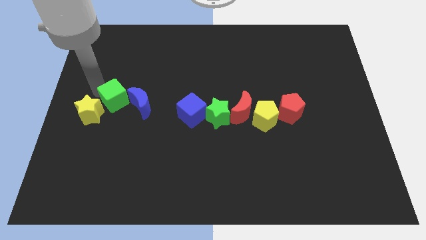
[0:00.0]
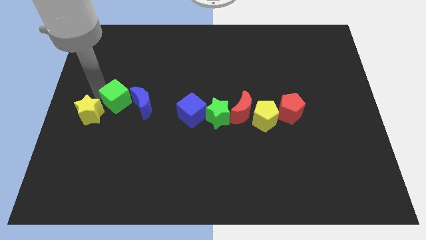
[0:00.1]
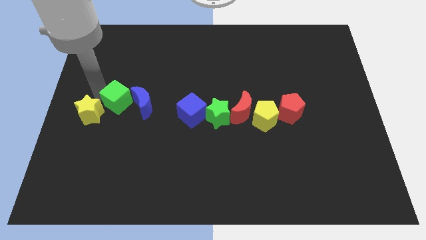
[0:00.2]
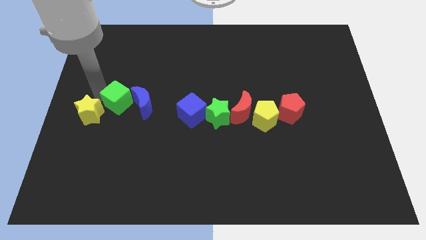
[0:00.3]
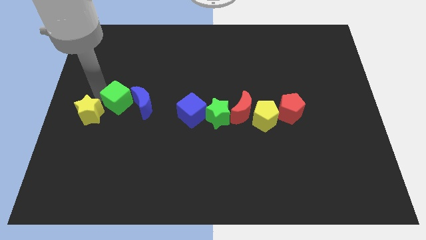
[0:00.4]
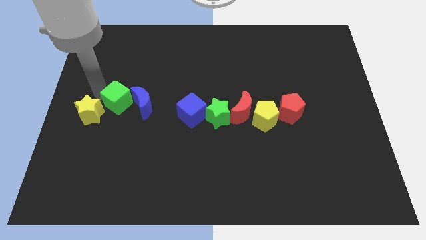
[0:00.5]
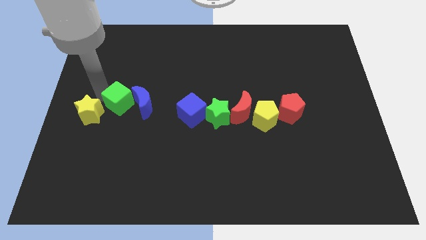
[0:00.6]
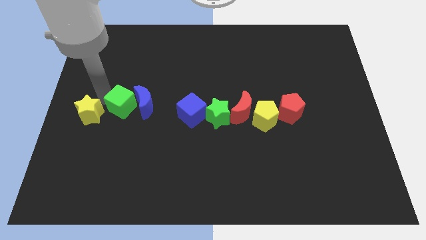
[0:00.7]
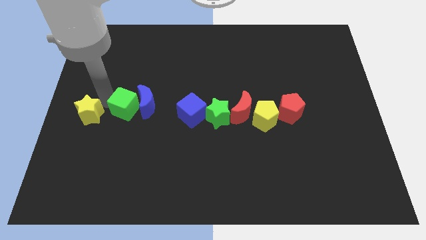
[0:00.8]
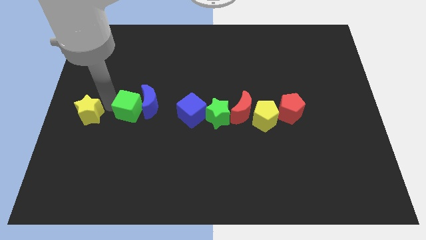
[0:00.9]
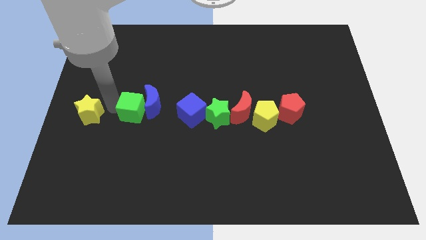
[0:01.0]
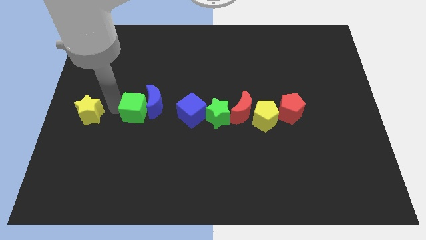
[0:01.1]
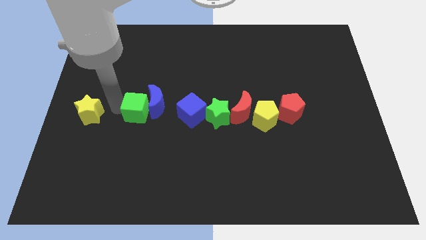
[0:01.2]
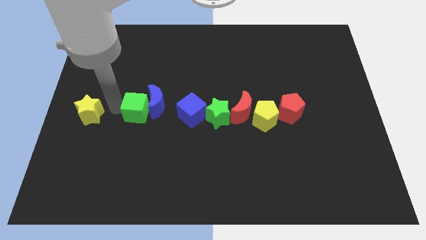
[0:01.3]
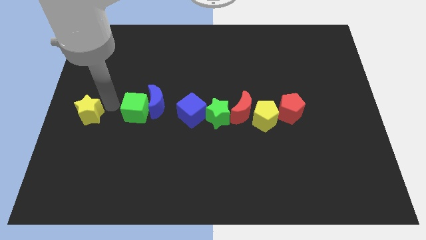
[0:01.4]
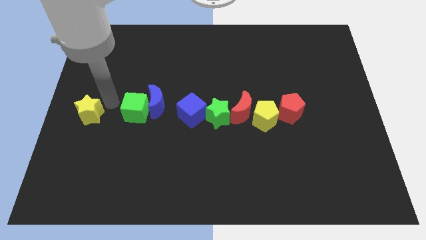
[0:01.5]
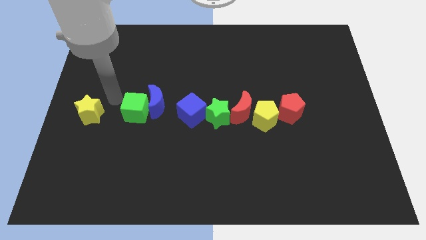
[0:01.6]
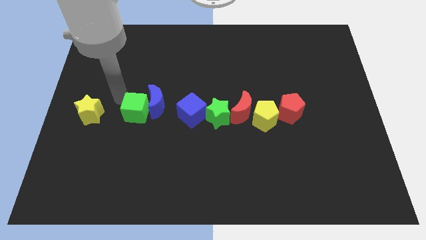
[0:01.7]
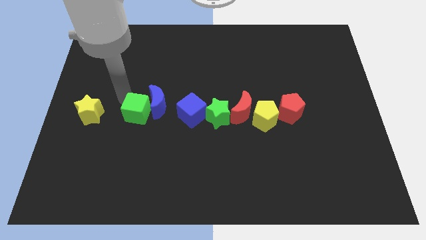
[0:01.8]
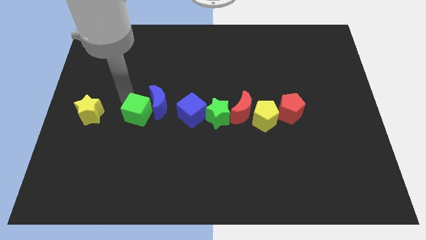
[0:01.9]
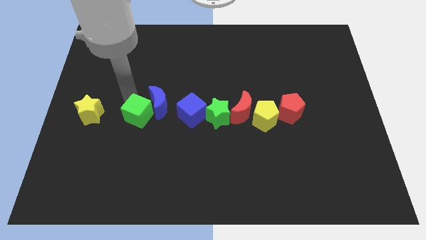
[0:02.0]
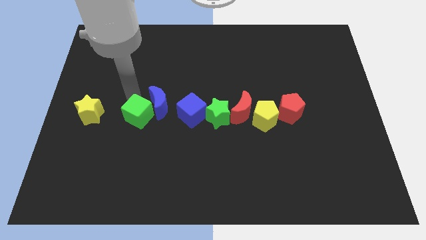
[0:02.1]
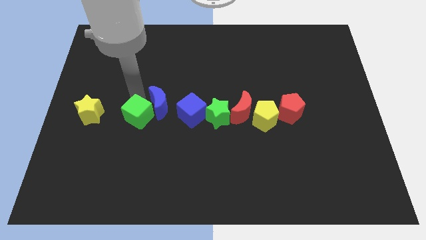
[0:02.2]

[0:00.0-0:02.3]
move the green cube to right side of blue crescent

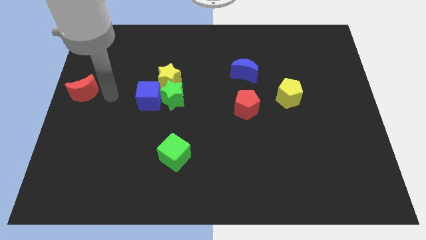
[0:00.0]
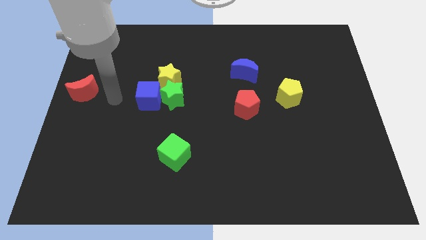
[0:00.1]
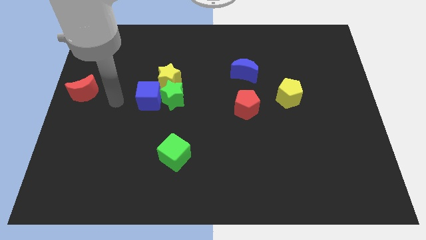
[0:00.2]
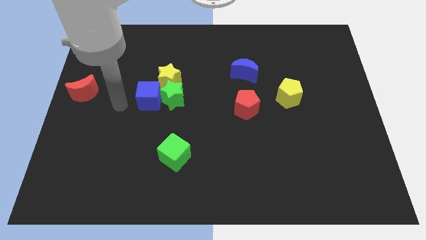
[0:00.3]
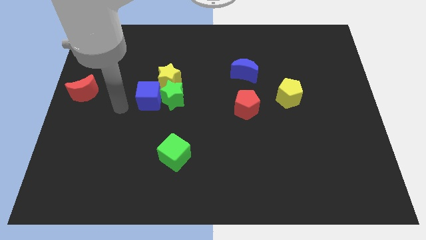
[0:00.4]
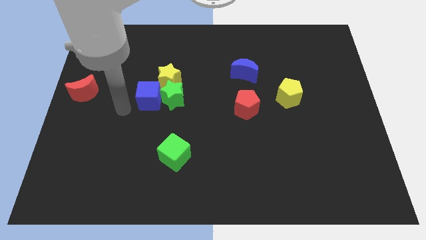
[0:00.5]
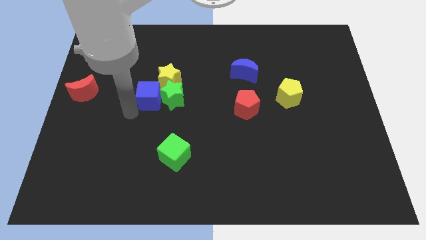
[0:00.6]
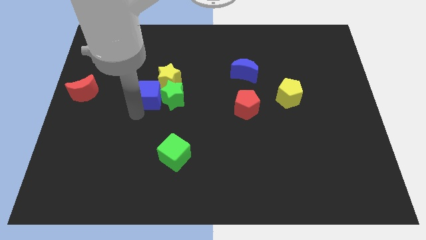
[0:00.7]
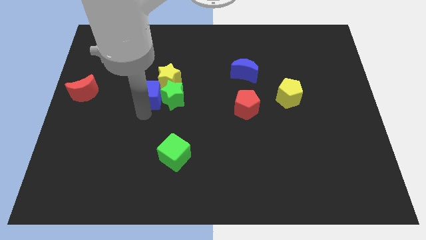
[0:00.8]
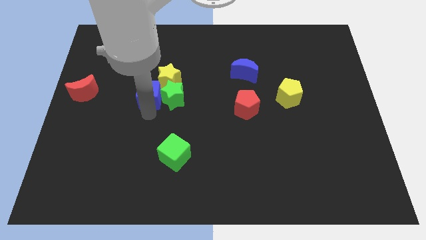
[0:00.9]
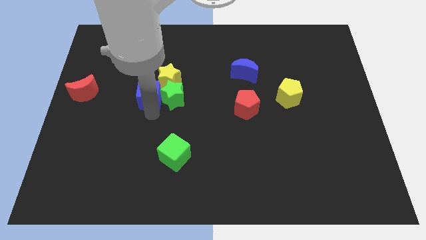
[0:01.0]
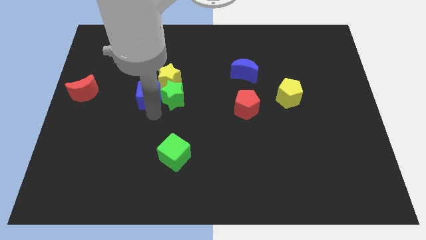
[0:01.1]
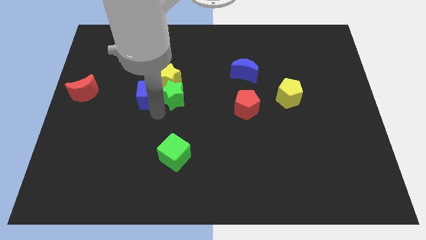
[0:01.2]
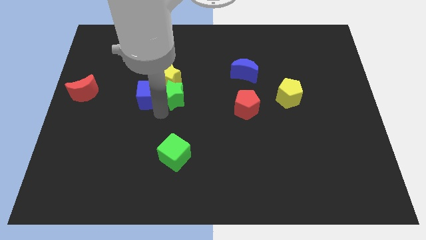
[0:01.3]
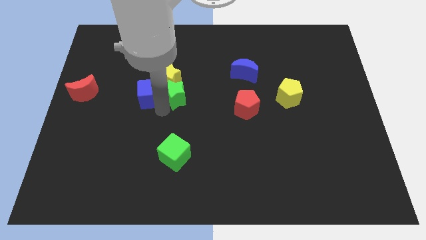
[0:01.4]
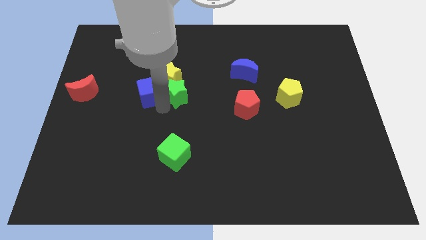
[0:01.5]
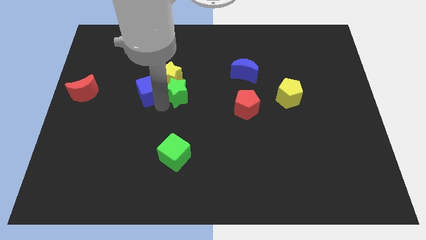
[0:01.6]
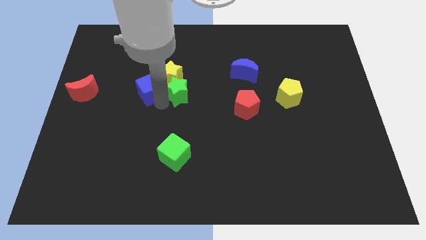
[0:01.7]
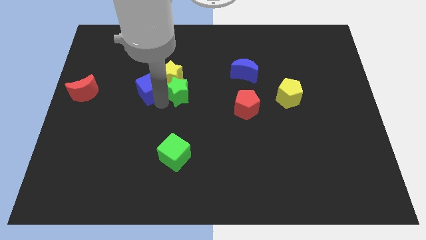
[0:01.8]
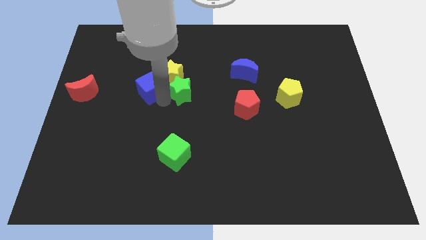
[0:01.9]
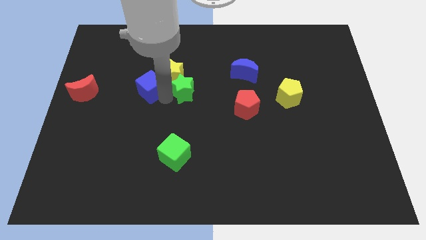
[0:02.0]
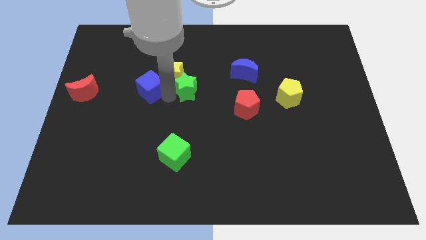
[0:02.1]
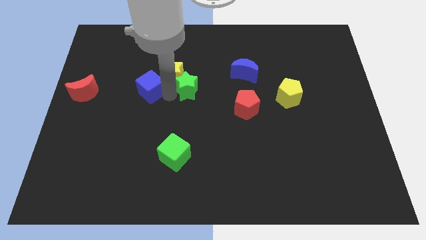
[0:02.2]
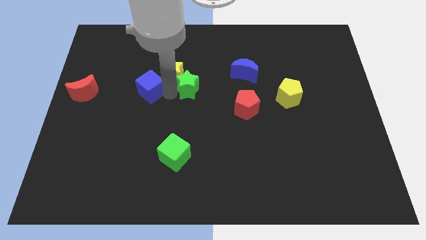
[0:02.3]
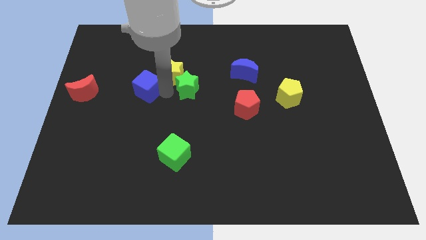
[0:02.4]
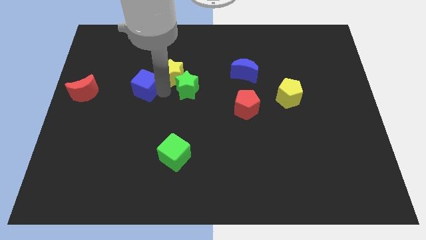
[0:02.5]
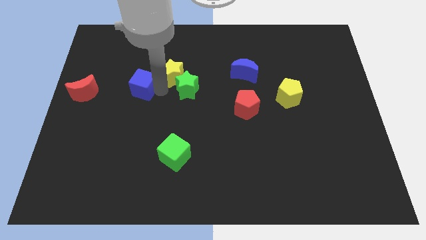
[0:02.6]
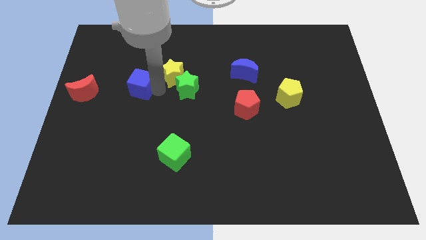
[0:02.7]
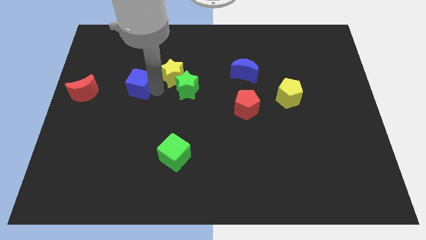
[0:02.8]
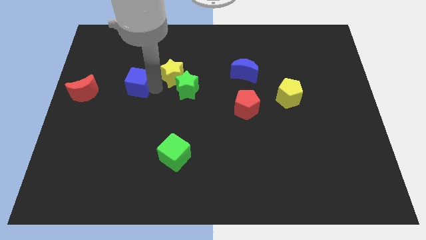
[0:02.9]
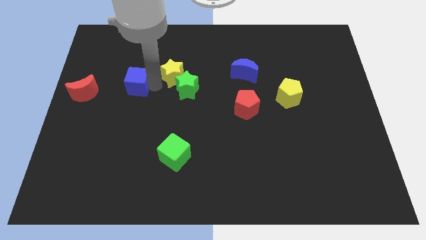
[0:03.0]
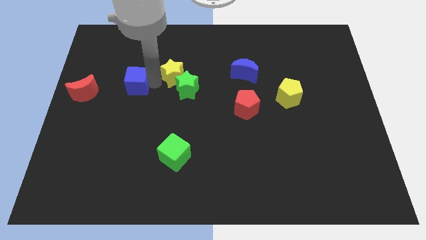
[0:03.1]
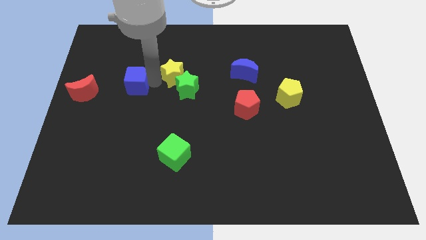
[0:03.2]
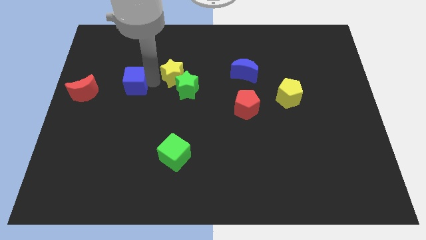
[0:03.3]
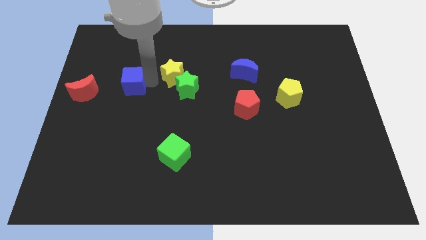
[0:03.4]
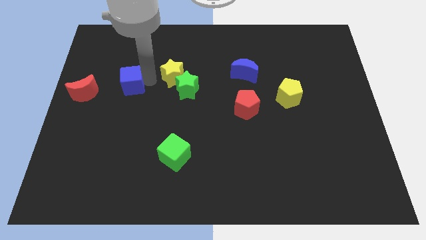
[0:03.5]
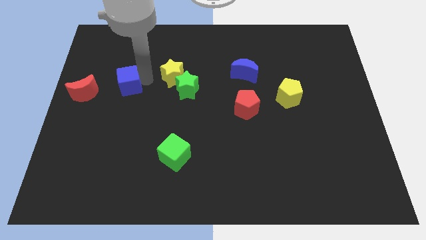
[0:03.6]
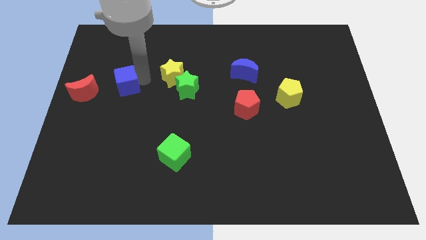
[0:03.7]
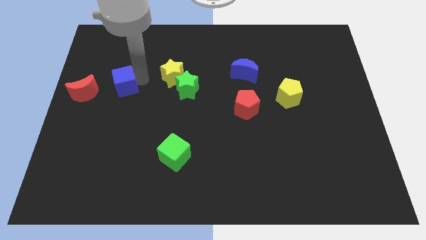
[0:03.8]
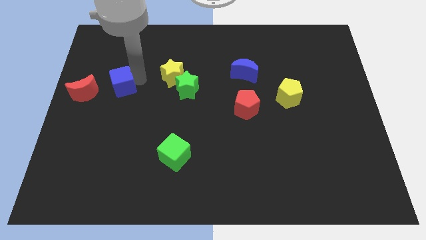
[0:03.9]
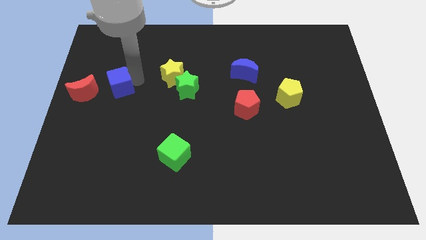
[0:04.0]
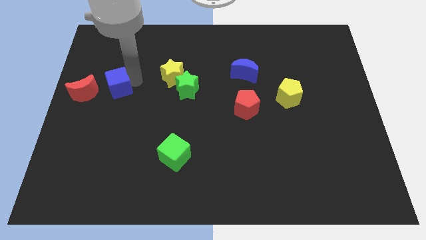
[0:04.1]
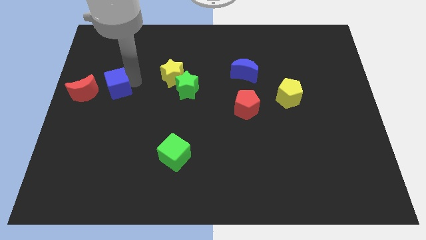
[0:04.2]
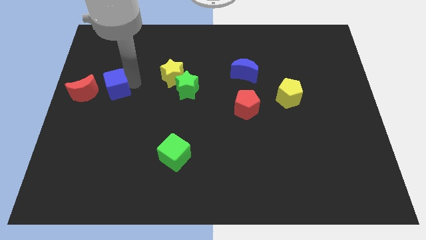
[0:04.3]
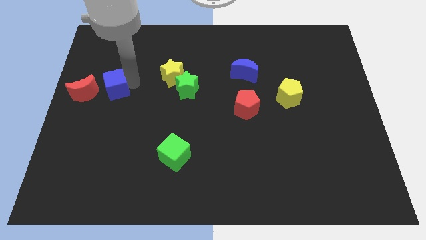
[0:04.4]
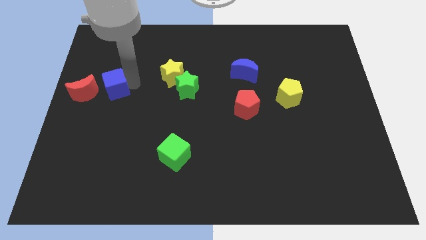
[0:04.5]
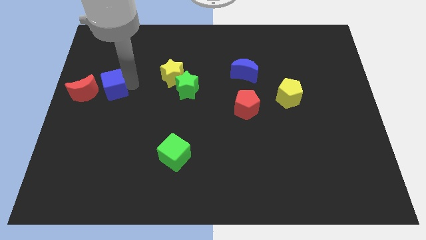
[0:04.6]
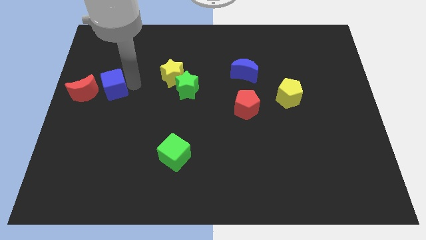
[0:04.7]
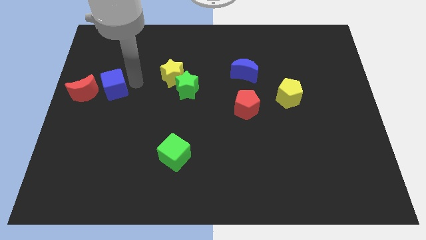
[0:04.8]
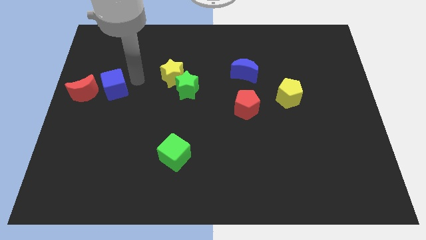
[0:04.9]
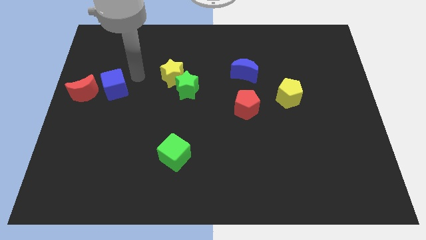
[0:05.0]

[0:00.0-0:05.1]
separate the blue cube to the right of red moon

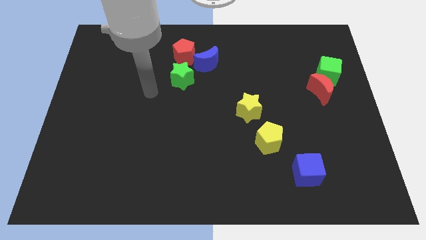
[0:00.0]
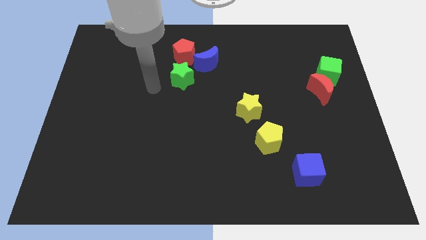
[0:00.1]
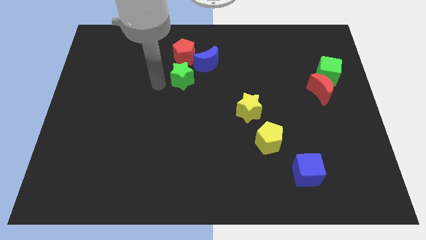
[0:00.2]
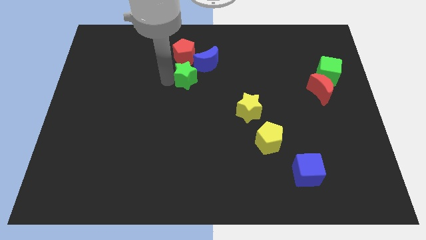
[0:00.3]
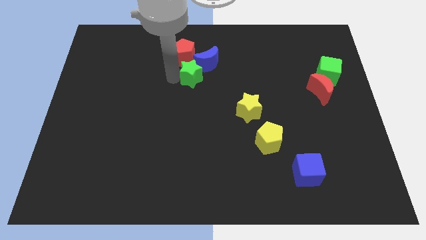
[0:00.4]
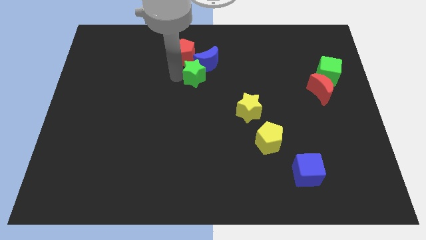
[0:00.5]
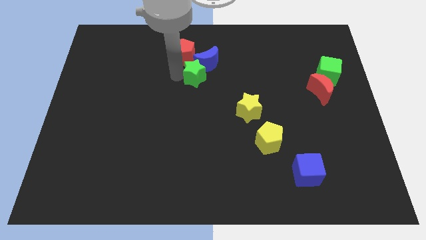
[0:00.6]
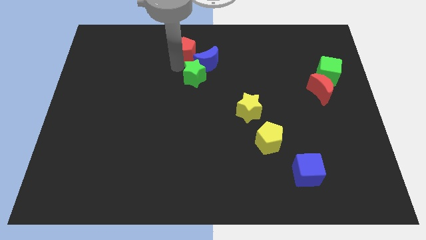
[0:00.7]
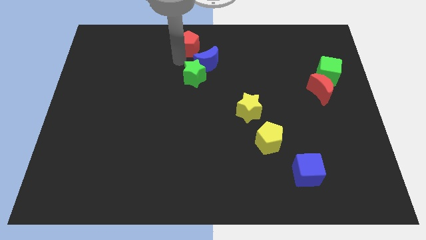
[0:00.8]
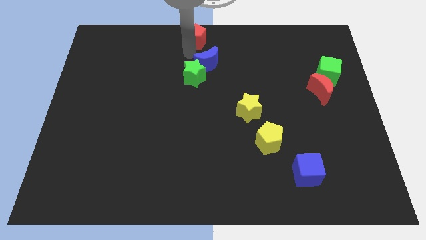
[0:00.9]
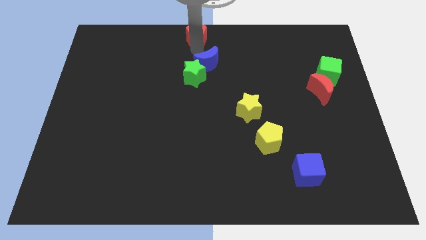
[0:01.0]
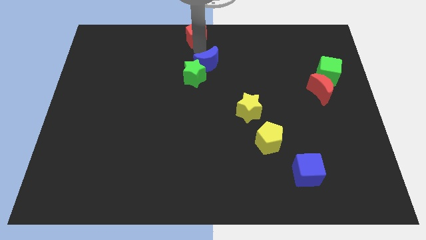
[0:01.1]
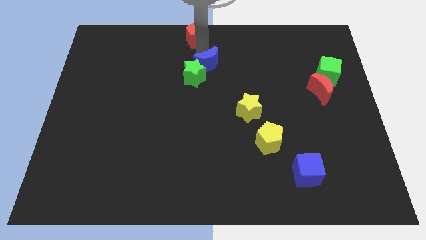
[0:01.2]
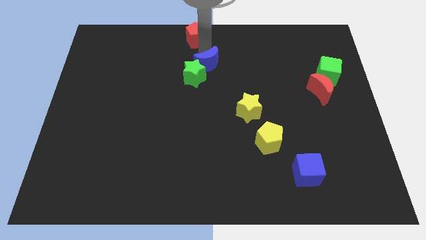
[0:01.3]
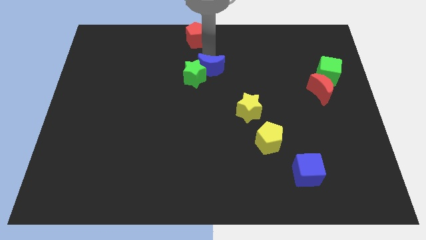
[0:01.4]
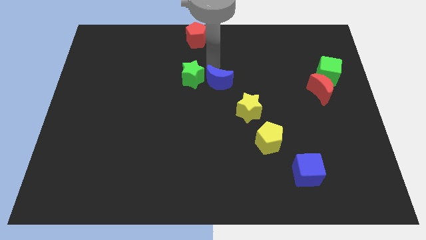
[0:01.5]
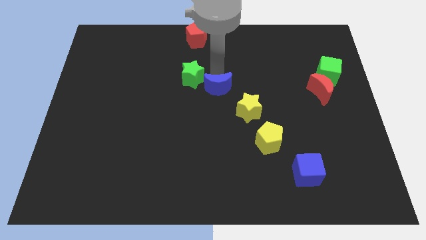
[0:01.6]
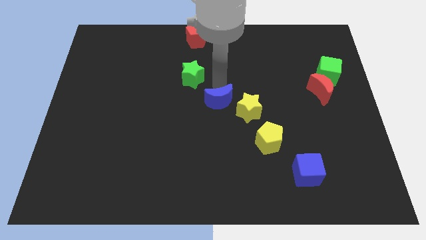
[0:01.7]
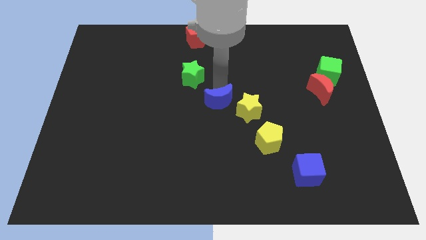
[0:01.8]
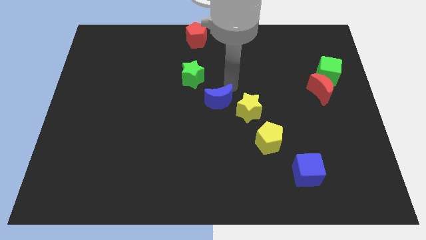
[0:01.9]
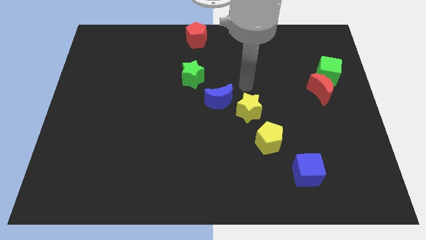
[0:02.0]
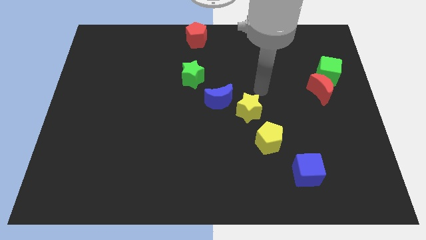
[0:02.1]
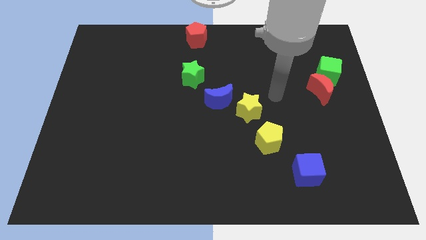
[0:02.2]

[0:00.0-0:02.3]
separate the group of green star red pentagon and blue crescent vertically
